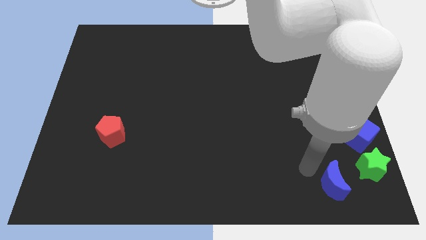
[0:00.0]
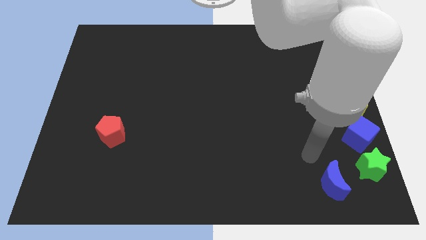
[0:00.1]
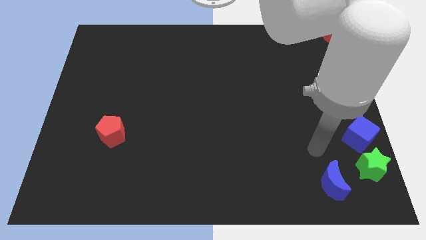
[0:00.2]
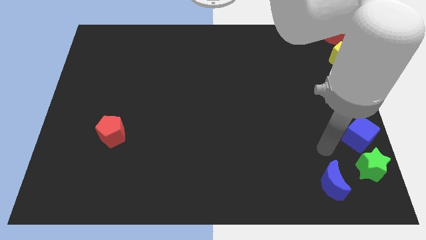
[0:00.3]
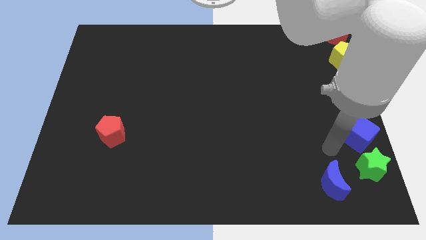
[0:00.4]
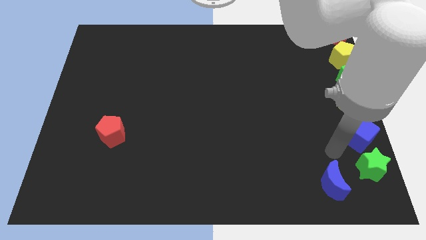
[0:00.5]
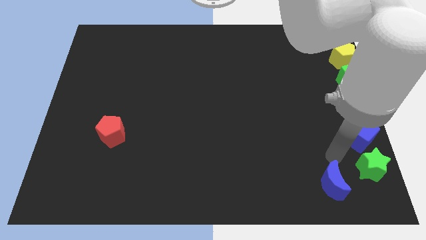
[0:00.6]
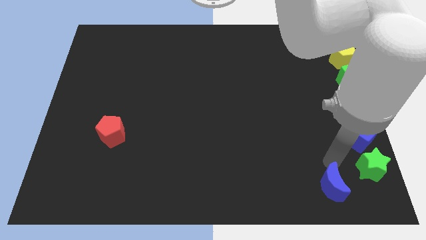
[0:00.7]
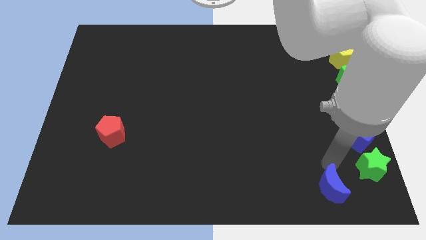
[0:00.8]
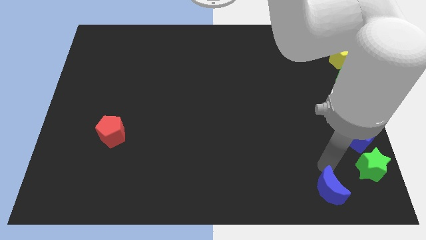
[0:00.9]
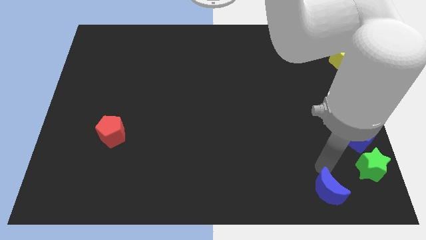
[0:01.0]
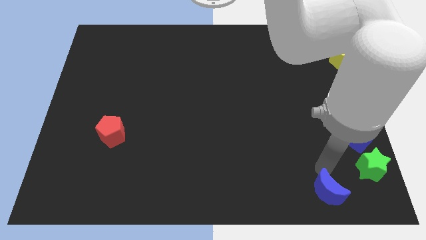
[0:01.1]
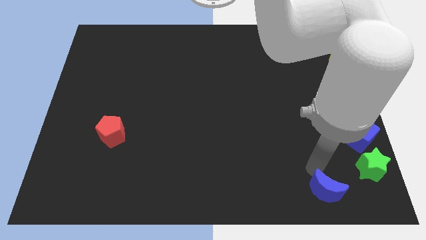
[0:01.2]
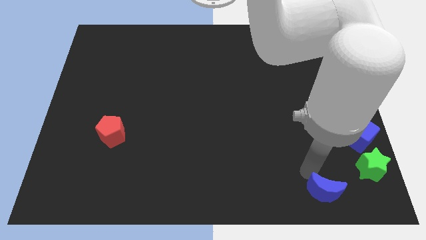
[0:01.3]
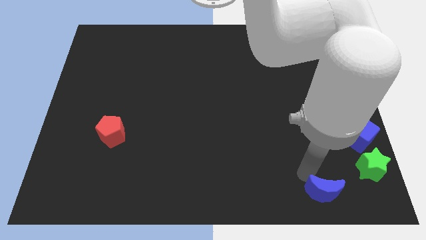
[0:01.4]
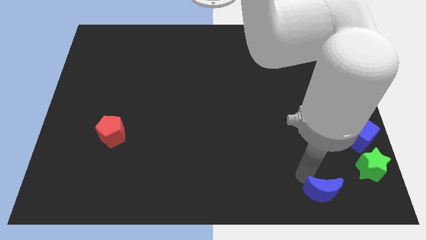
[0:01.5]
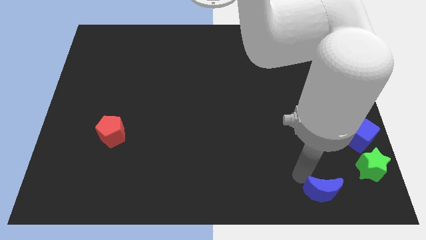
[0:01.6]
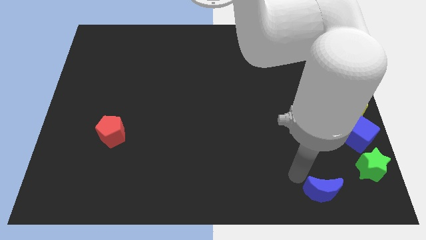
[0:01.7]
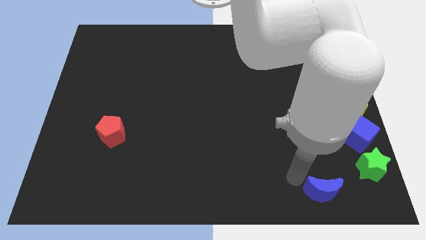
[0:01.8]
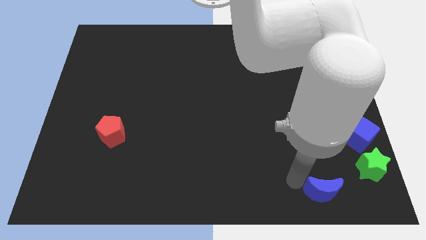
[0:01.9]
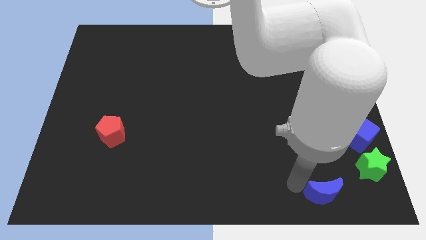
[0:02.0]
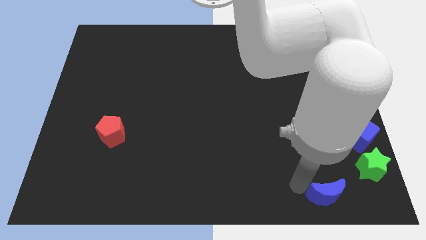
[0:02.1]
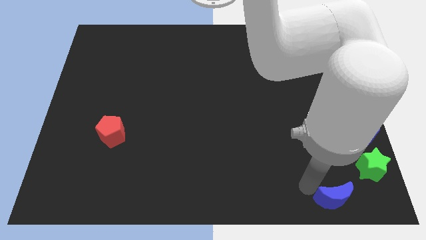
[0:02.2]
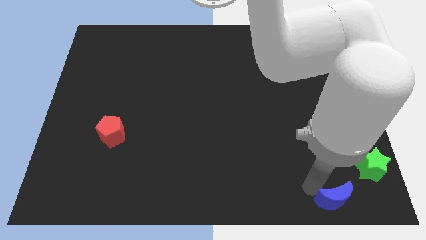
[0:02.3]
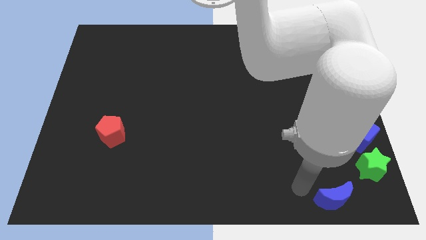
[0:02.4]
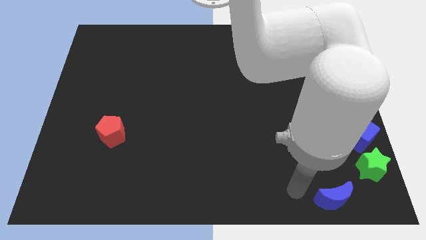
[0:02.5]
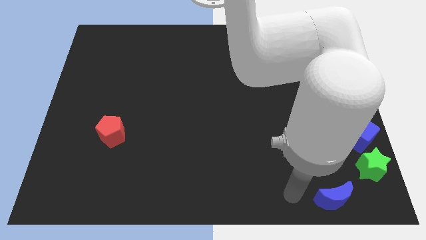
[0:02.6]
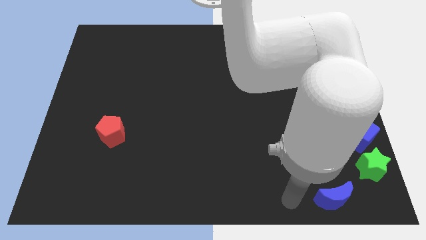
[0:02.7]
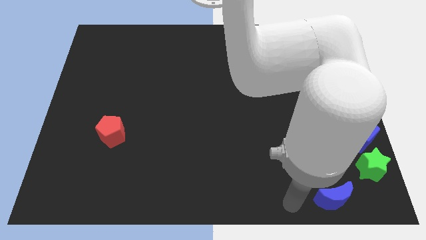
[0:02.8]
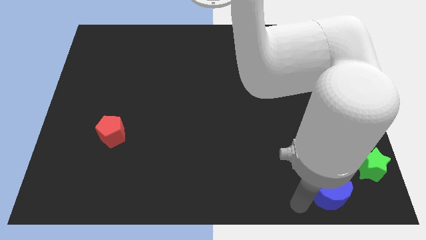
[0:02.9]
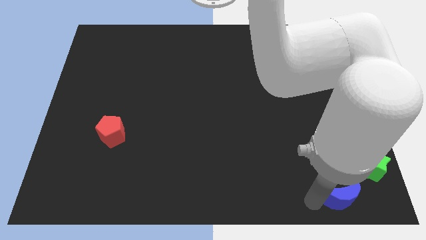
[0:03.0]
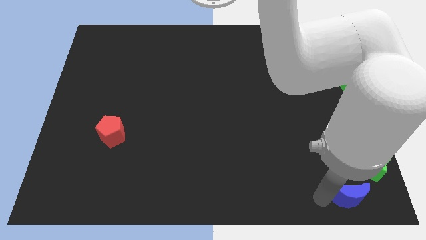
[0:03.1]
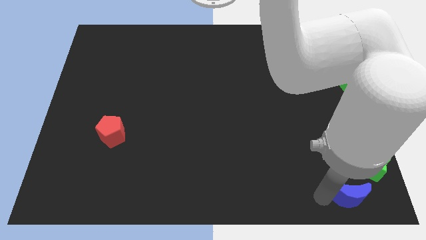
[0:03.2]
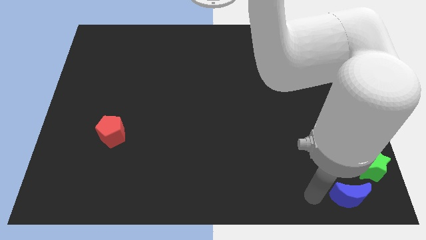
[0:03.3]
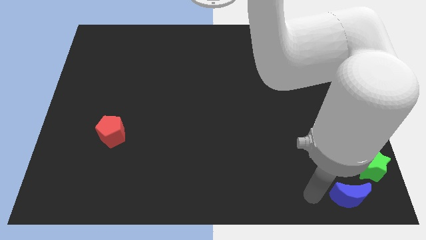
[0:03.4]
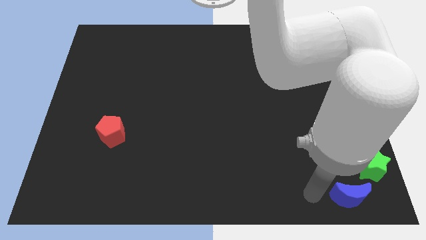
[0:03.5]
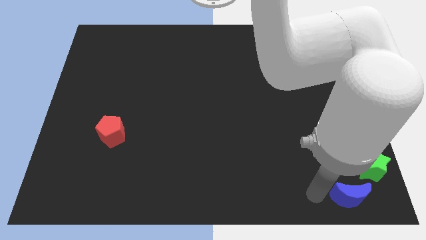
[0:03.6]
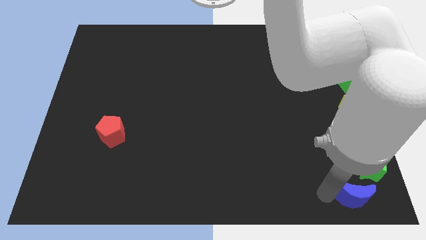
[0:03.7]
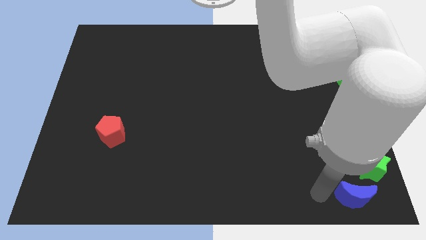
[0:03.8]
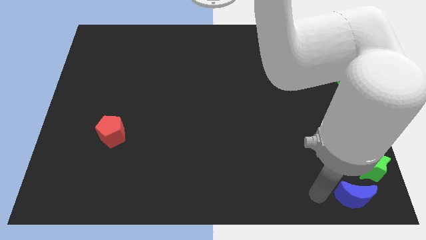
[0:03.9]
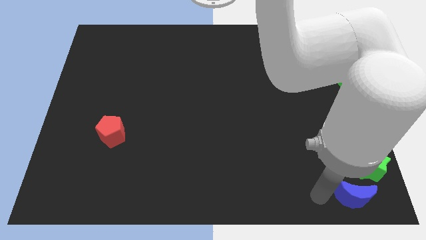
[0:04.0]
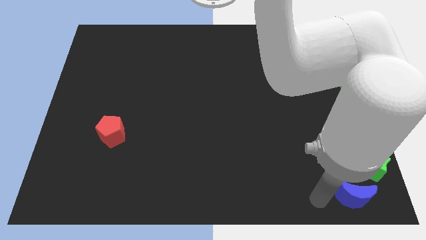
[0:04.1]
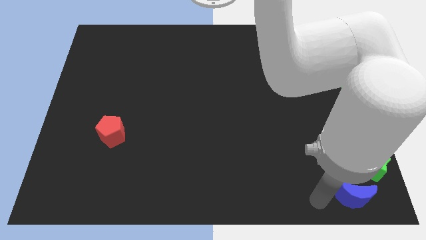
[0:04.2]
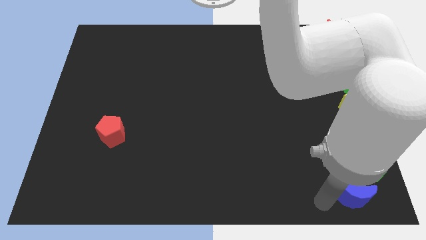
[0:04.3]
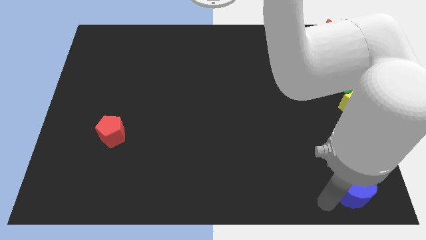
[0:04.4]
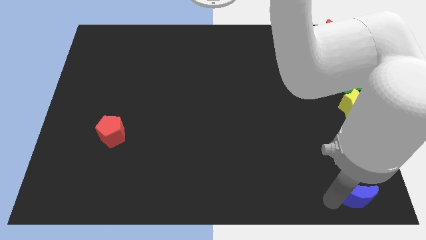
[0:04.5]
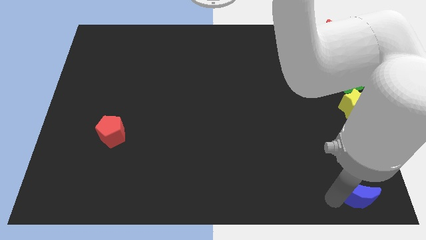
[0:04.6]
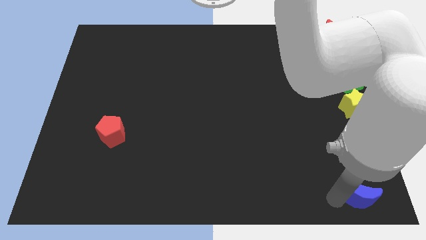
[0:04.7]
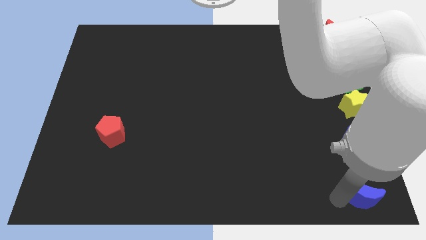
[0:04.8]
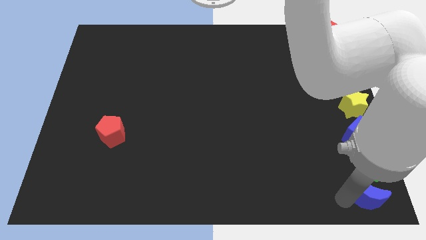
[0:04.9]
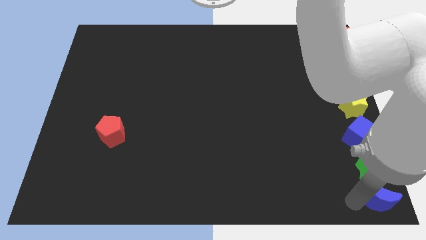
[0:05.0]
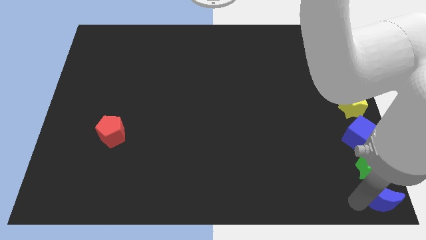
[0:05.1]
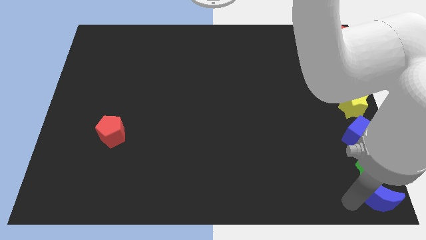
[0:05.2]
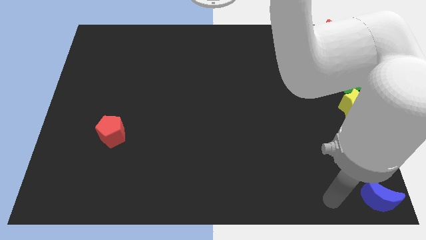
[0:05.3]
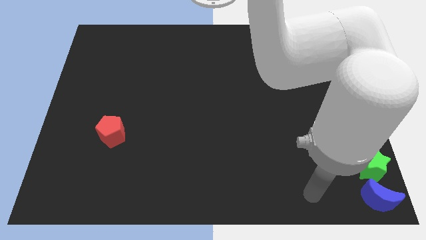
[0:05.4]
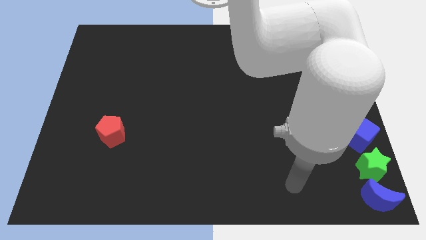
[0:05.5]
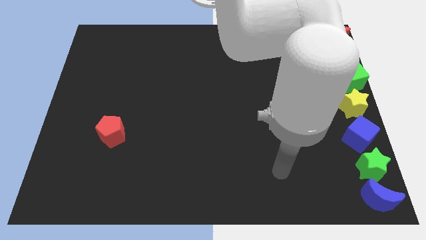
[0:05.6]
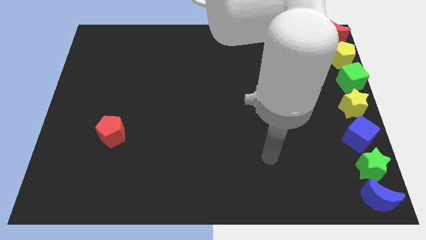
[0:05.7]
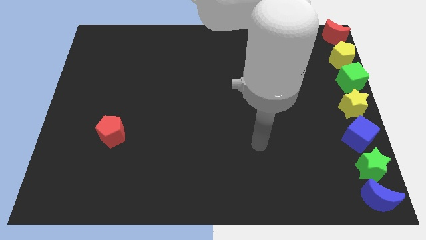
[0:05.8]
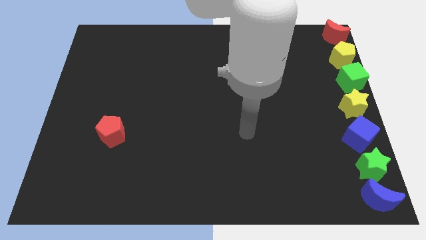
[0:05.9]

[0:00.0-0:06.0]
put the blue moon to the bottom right corner of the board

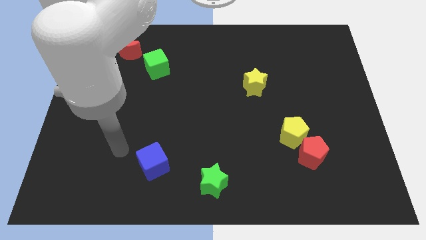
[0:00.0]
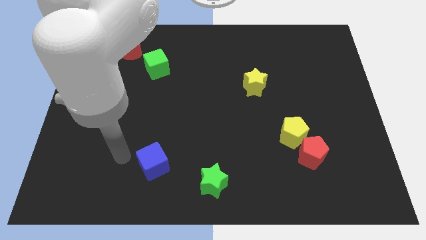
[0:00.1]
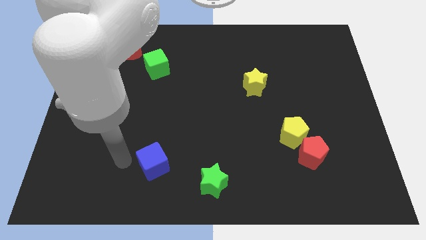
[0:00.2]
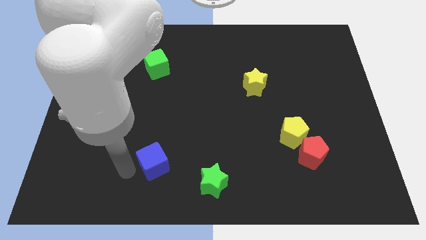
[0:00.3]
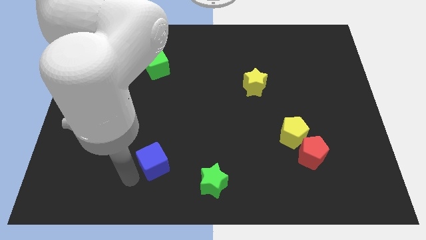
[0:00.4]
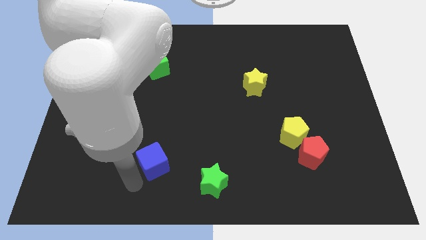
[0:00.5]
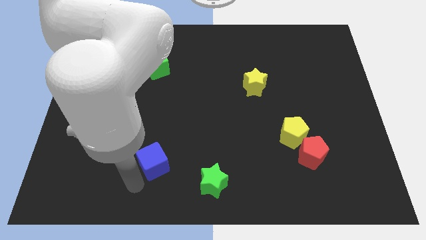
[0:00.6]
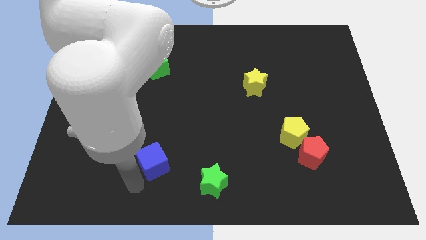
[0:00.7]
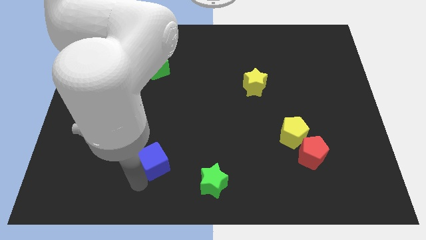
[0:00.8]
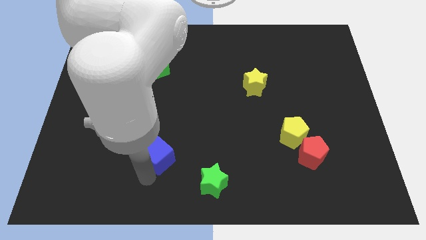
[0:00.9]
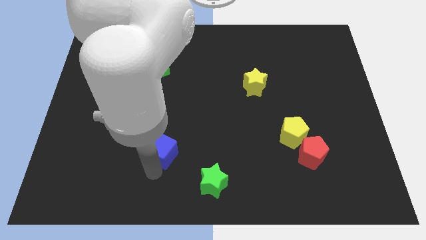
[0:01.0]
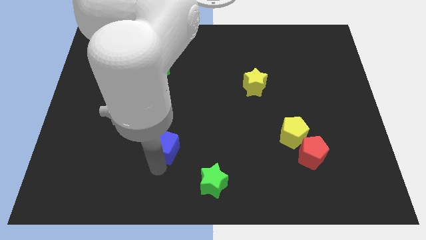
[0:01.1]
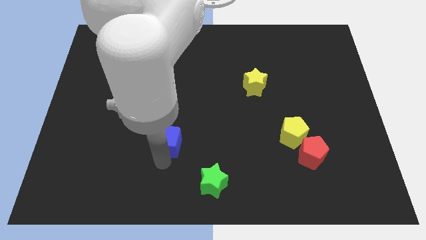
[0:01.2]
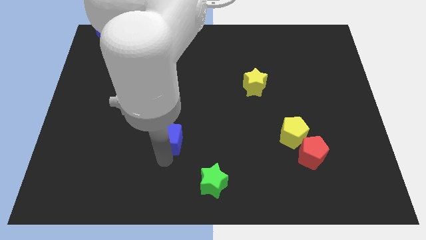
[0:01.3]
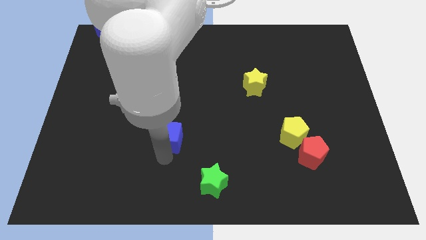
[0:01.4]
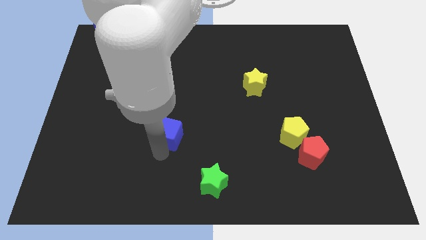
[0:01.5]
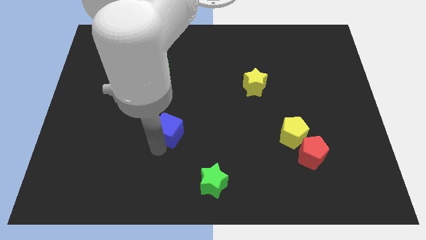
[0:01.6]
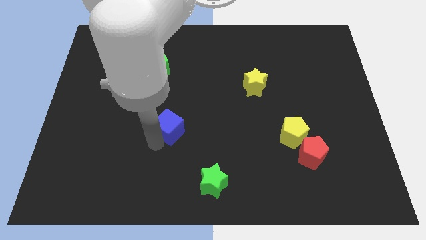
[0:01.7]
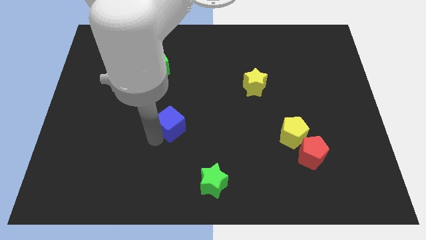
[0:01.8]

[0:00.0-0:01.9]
put the blue cube diagonally top left to the green star

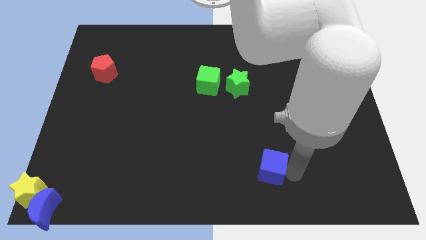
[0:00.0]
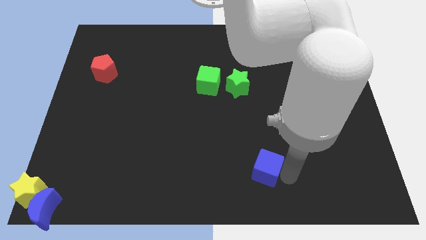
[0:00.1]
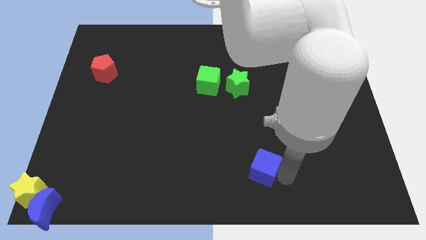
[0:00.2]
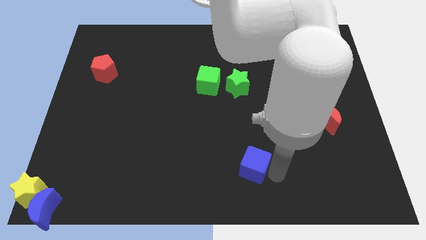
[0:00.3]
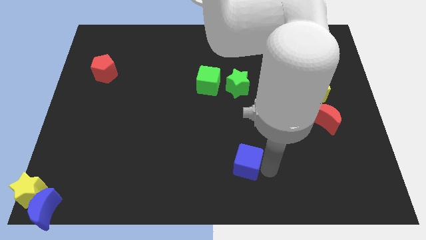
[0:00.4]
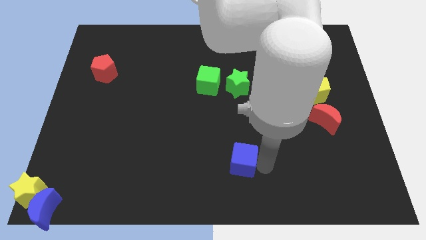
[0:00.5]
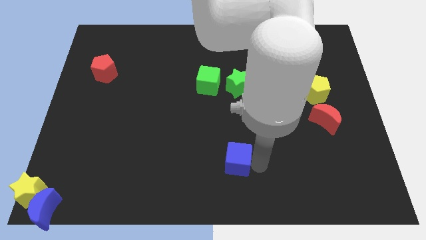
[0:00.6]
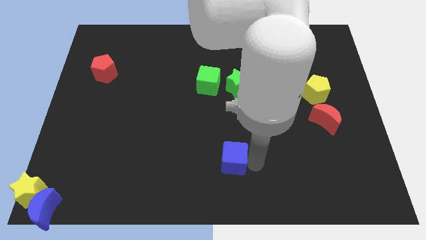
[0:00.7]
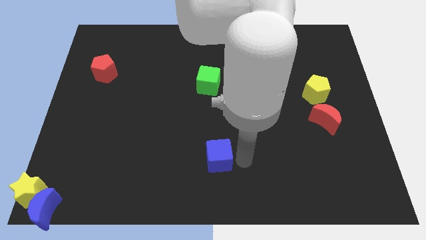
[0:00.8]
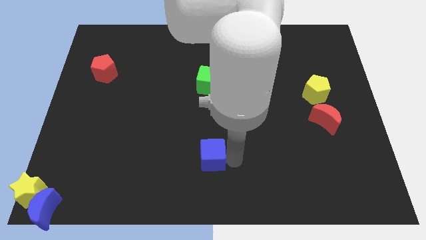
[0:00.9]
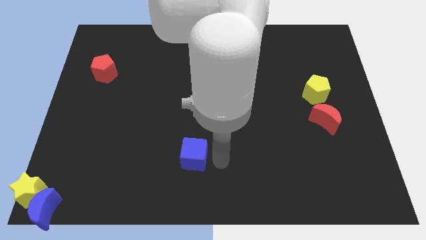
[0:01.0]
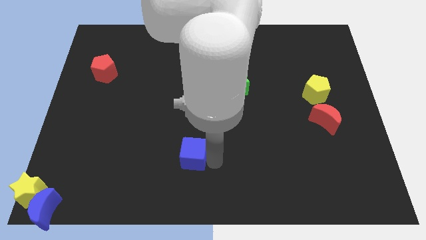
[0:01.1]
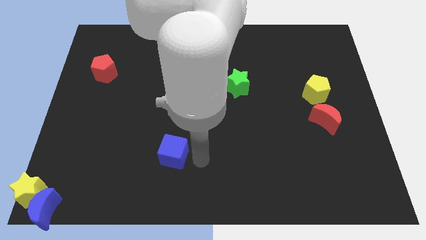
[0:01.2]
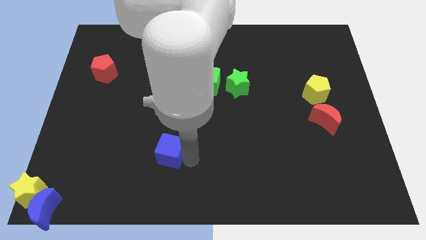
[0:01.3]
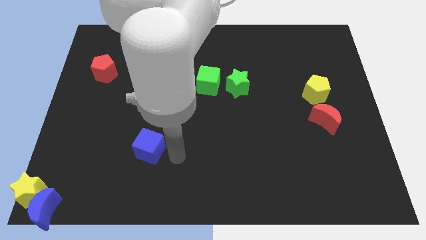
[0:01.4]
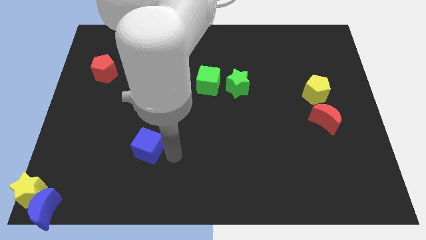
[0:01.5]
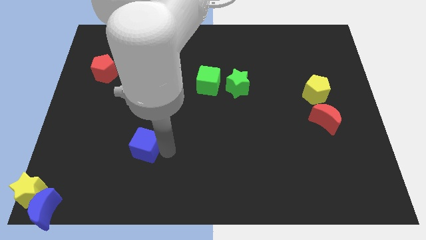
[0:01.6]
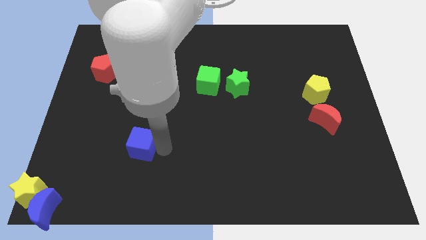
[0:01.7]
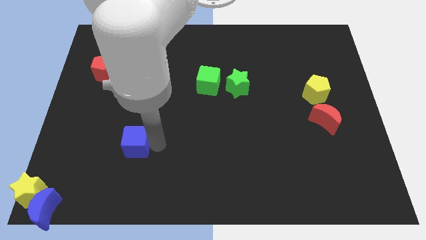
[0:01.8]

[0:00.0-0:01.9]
push the blue cube between the blue moon and green cube
